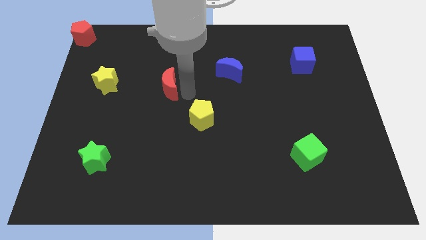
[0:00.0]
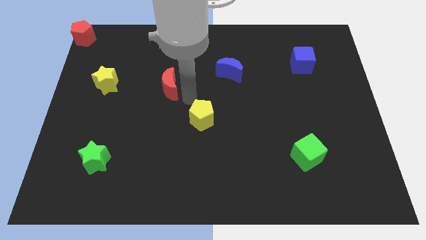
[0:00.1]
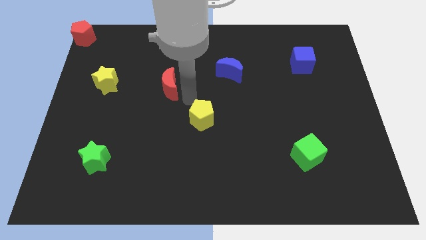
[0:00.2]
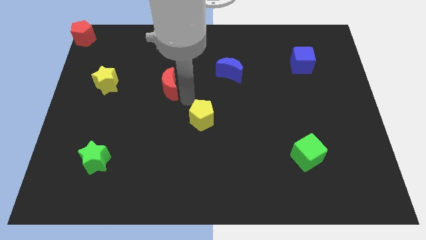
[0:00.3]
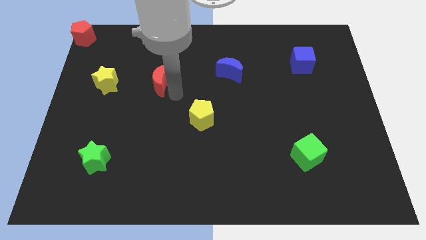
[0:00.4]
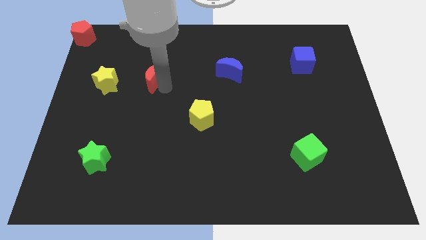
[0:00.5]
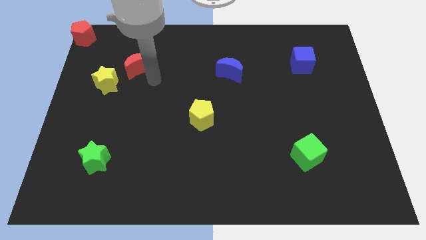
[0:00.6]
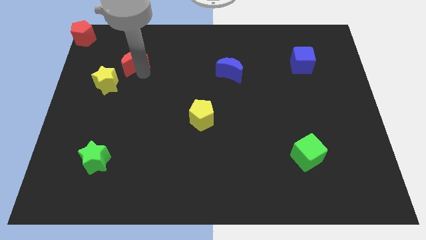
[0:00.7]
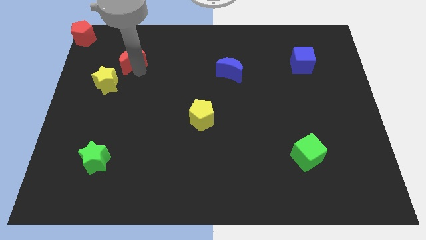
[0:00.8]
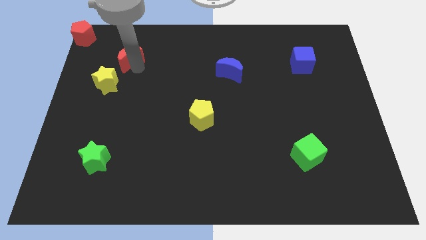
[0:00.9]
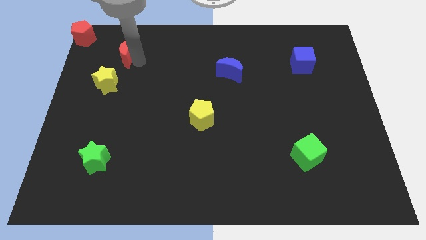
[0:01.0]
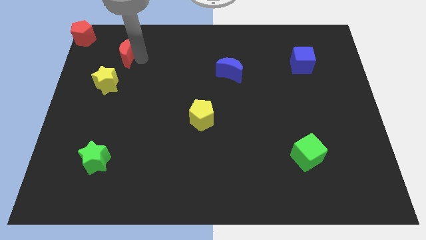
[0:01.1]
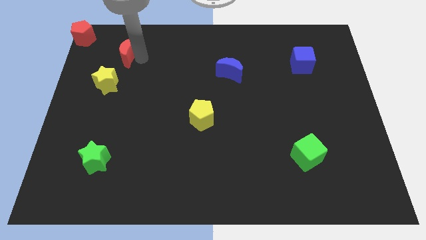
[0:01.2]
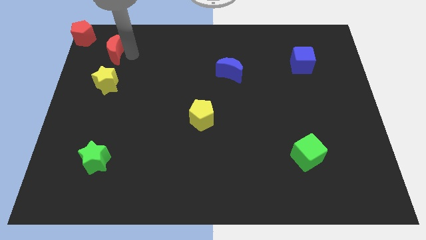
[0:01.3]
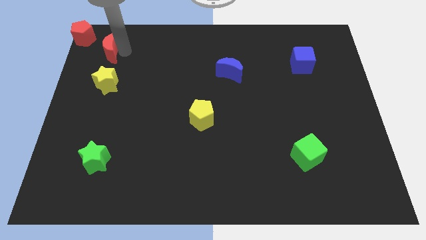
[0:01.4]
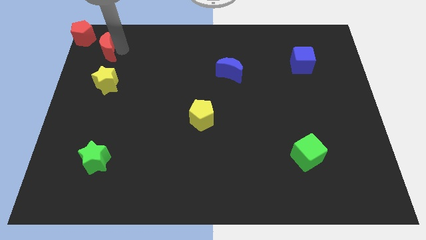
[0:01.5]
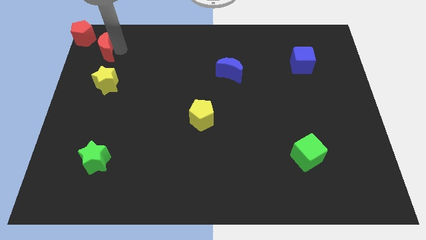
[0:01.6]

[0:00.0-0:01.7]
move the red moon above the yellow star

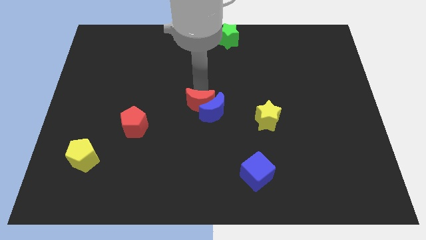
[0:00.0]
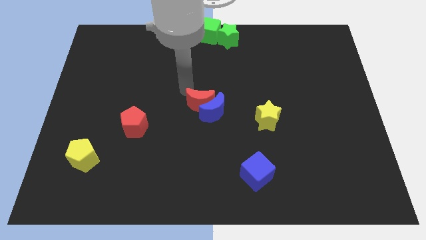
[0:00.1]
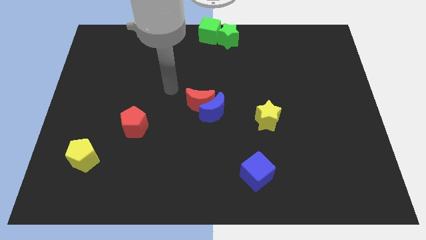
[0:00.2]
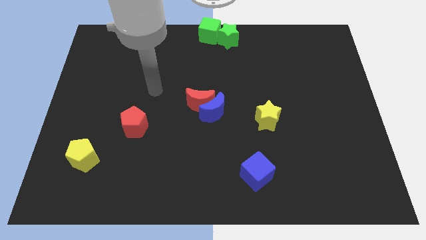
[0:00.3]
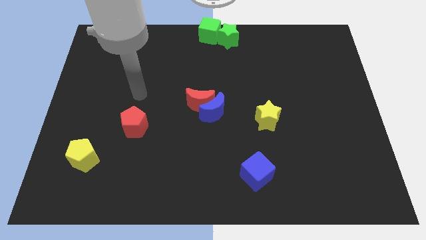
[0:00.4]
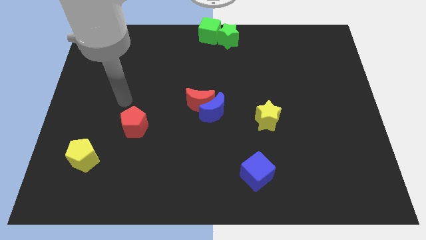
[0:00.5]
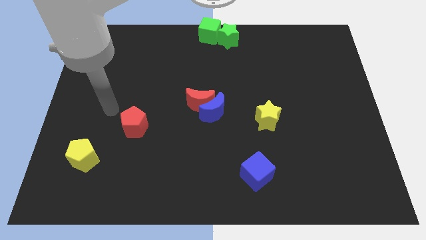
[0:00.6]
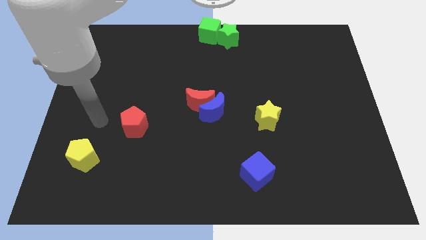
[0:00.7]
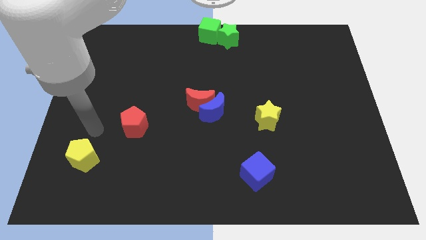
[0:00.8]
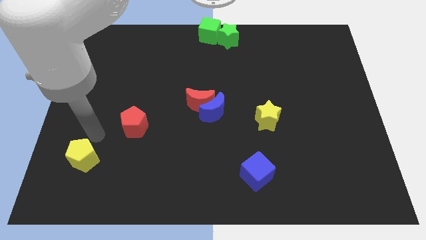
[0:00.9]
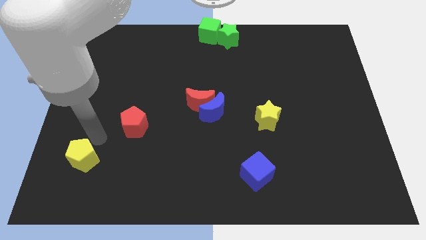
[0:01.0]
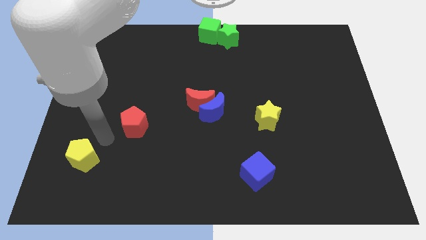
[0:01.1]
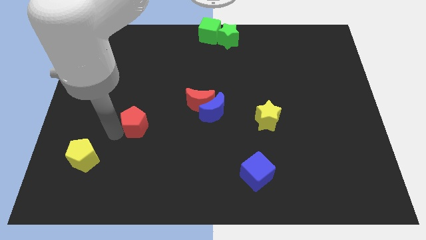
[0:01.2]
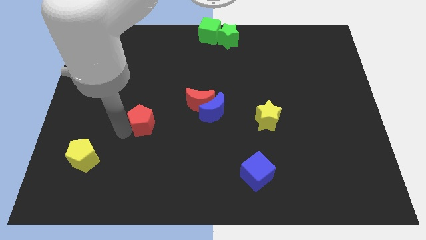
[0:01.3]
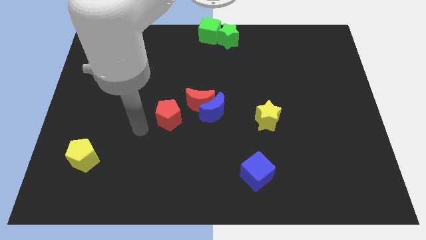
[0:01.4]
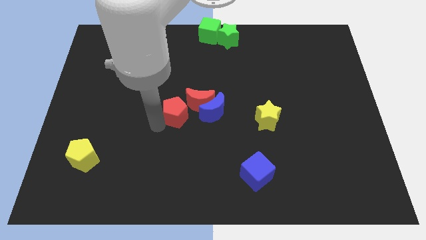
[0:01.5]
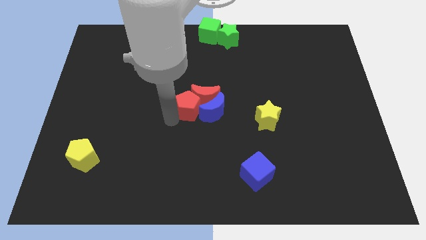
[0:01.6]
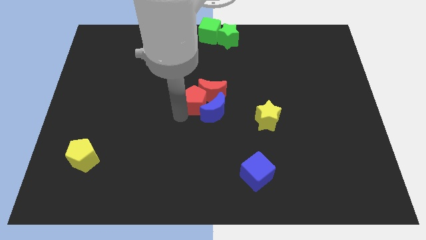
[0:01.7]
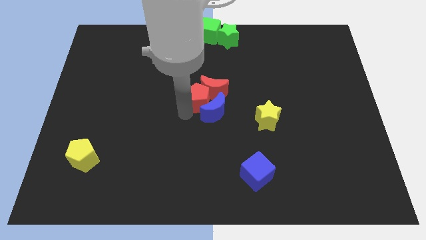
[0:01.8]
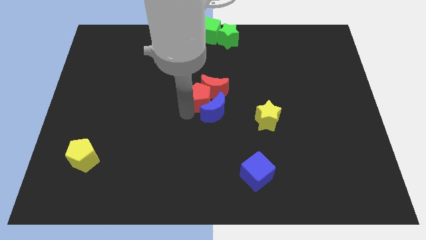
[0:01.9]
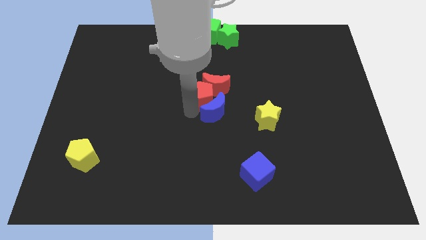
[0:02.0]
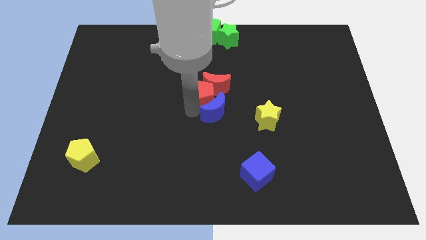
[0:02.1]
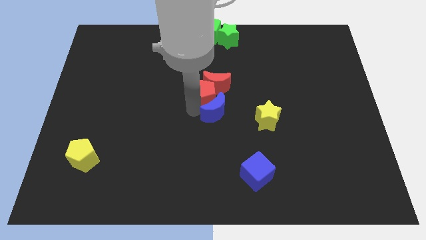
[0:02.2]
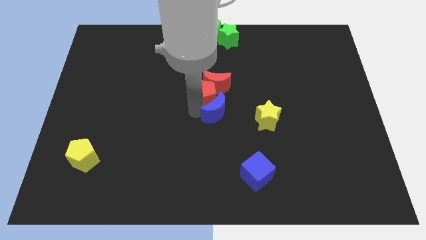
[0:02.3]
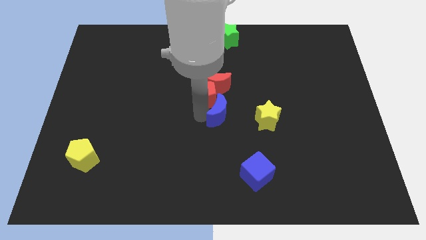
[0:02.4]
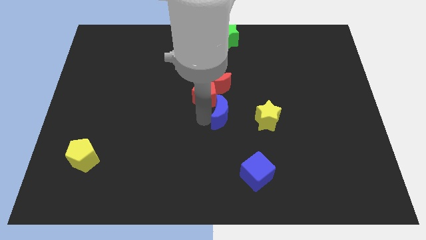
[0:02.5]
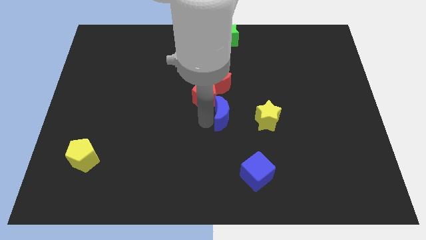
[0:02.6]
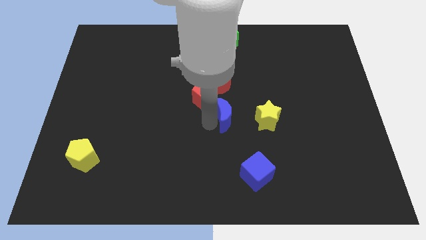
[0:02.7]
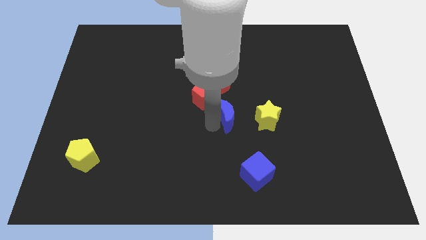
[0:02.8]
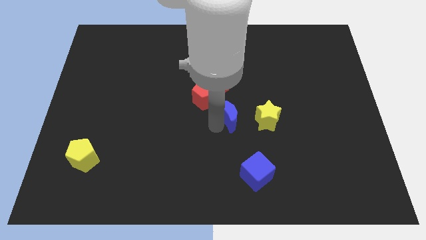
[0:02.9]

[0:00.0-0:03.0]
push the red pentagon into the red crescent

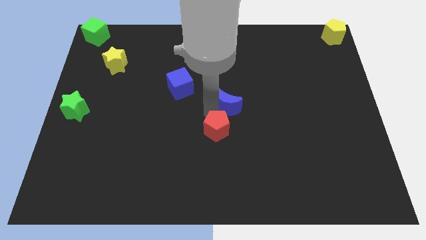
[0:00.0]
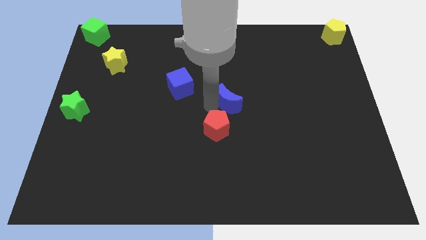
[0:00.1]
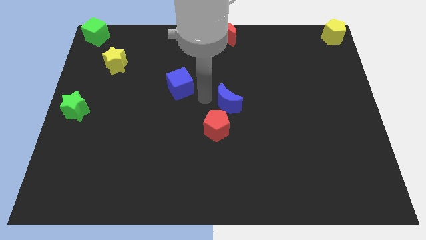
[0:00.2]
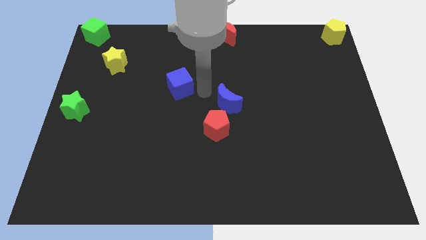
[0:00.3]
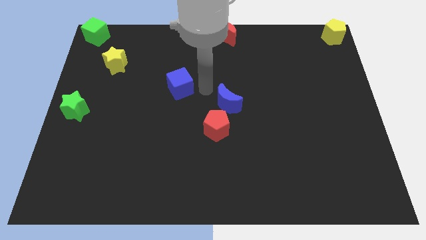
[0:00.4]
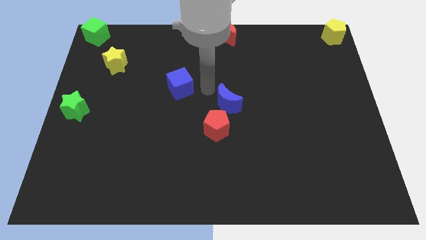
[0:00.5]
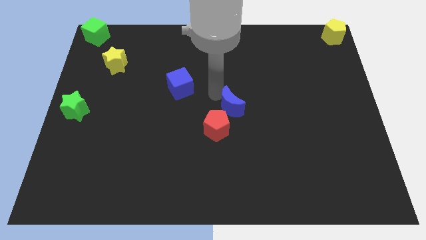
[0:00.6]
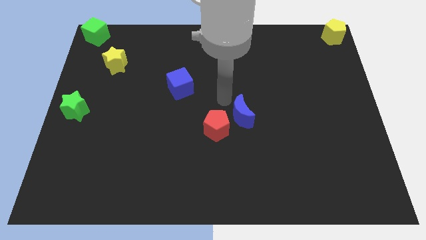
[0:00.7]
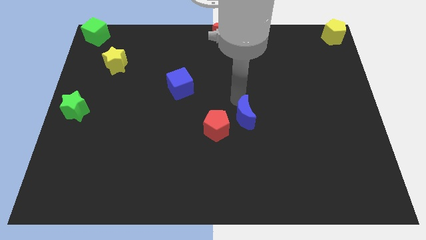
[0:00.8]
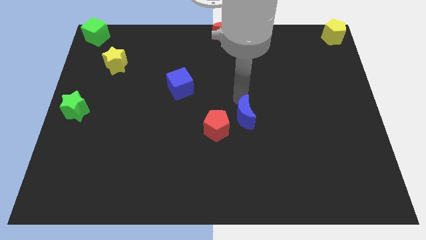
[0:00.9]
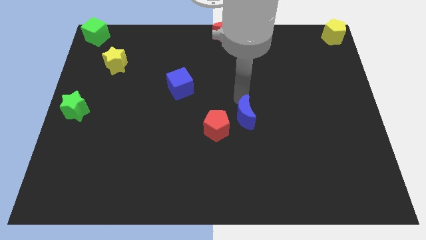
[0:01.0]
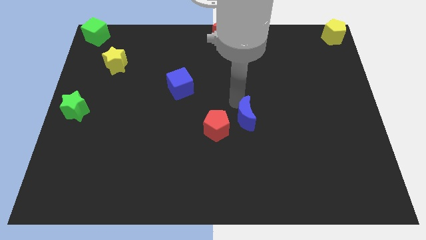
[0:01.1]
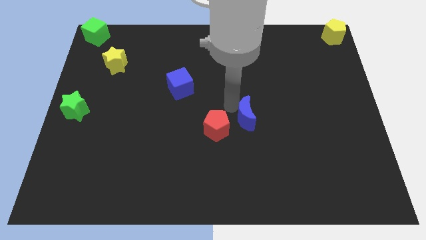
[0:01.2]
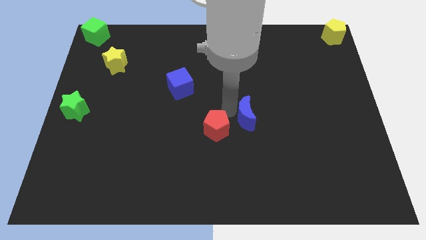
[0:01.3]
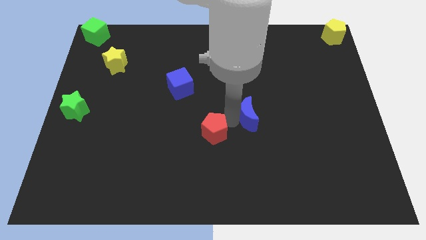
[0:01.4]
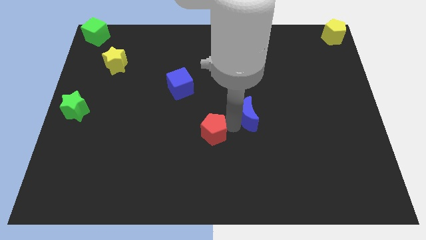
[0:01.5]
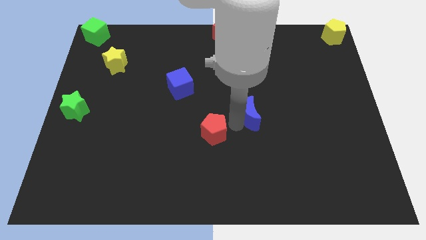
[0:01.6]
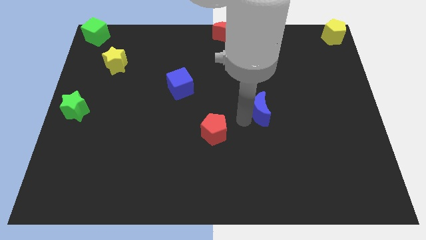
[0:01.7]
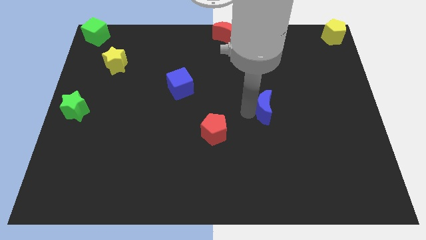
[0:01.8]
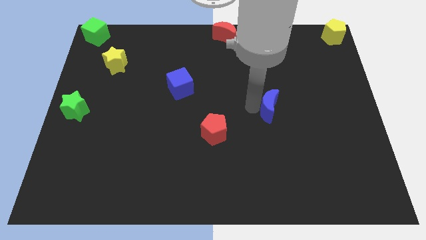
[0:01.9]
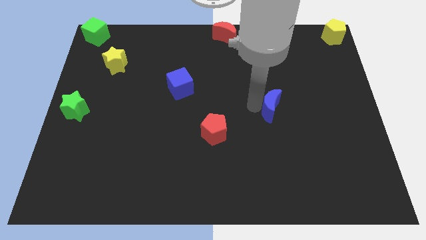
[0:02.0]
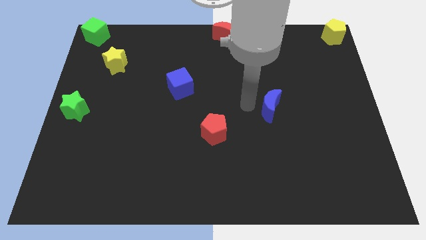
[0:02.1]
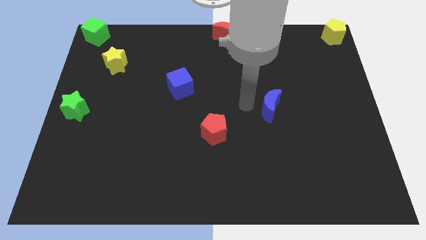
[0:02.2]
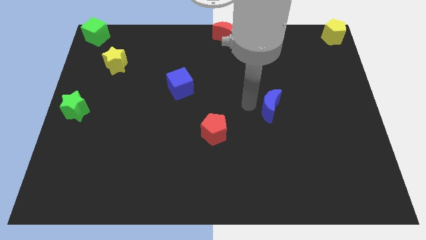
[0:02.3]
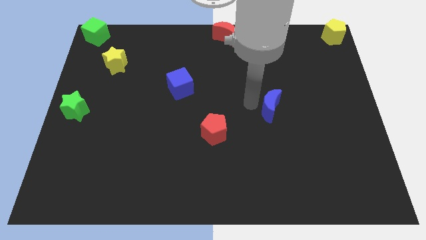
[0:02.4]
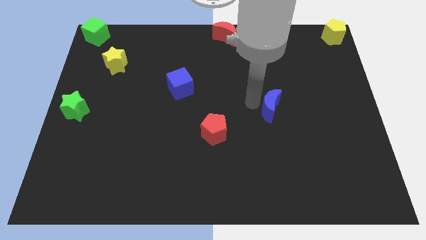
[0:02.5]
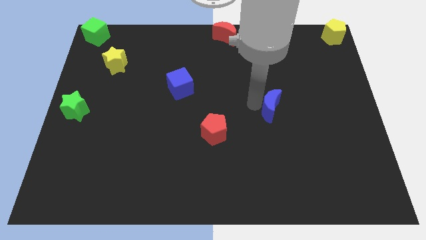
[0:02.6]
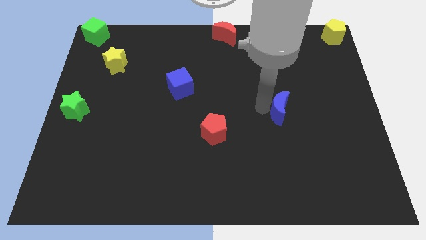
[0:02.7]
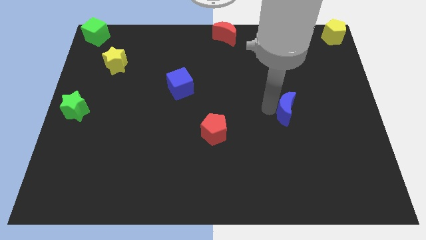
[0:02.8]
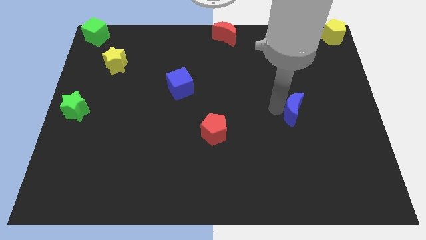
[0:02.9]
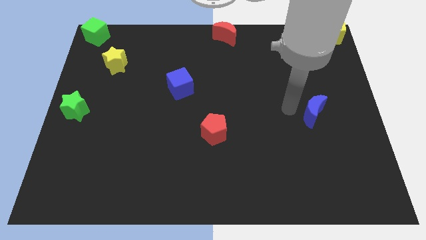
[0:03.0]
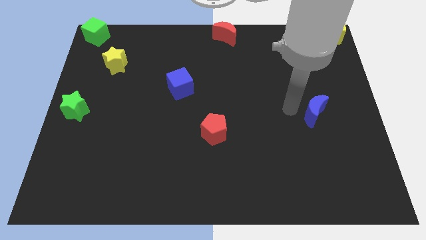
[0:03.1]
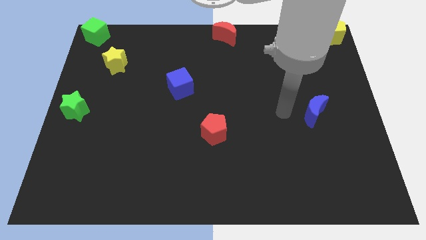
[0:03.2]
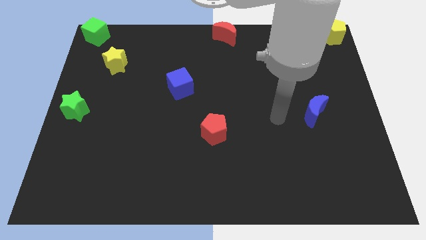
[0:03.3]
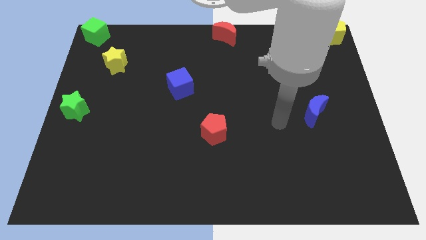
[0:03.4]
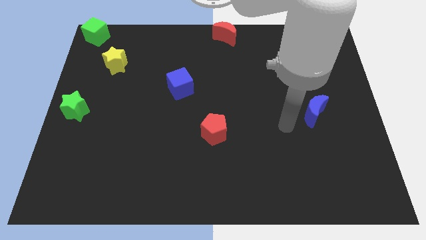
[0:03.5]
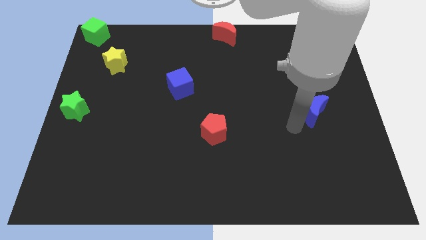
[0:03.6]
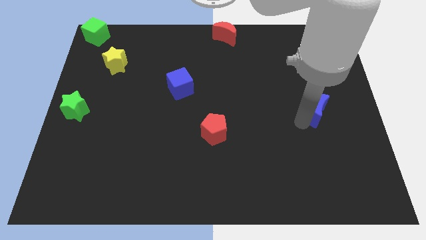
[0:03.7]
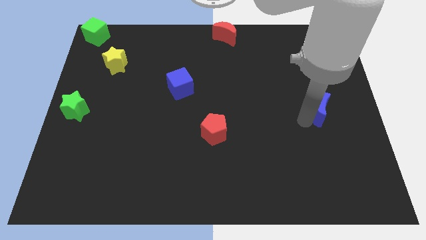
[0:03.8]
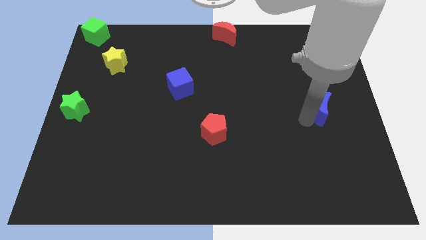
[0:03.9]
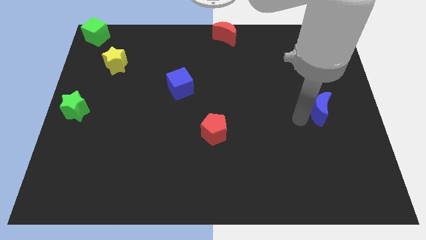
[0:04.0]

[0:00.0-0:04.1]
push the blue moon towards the center right side of the board
